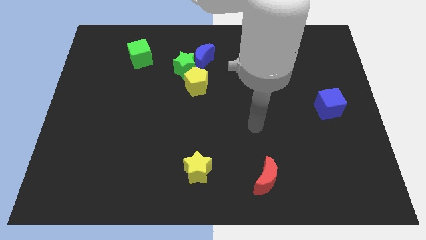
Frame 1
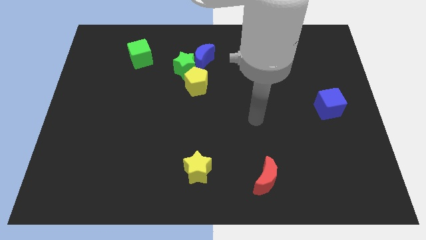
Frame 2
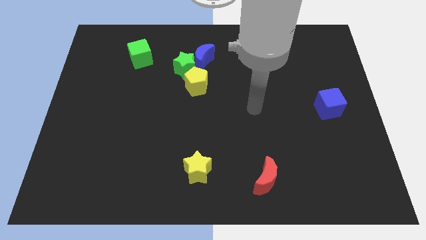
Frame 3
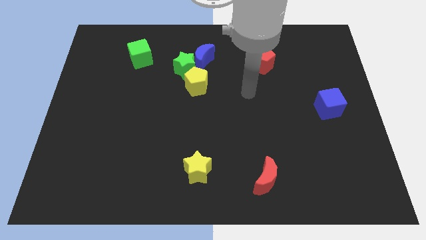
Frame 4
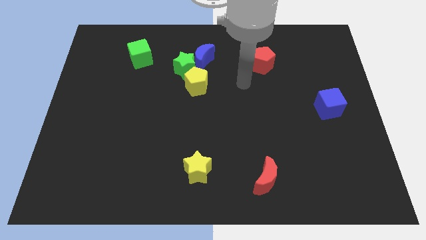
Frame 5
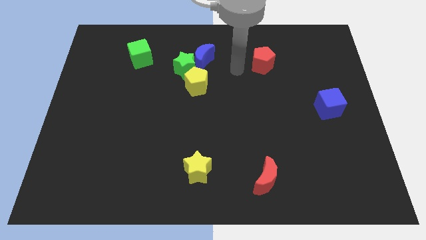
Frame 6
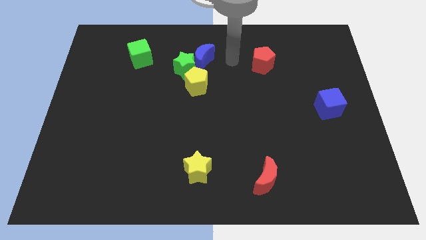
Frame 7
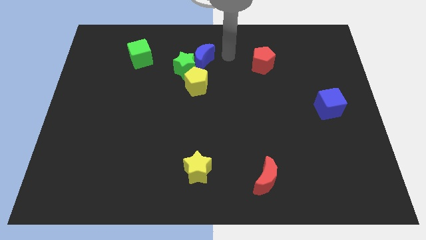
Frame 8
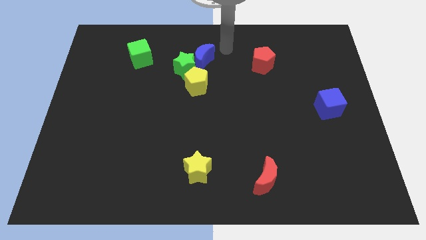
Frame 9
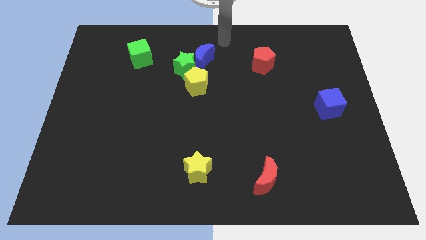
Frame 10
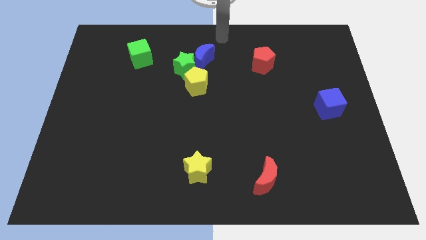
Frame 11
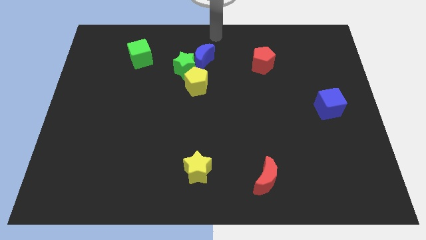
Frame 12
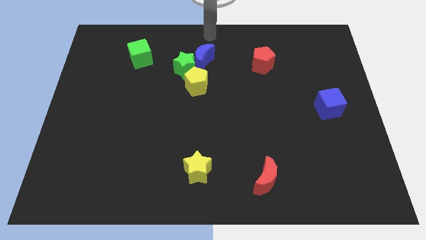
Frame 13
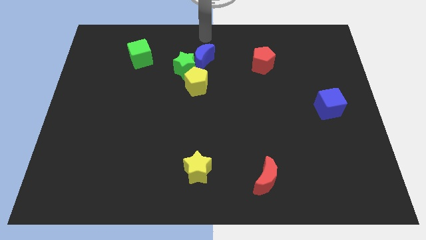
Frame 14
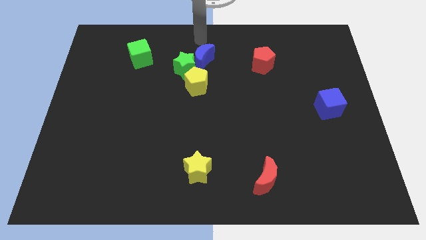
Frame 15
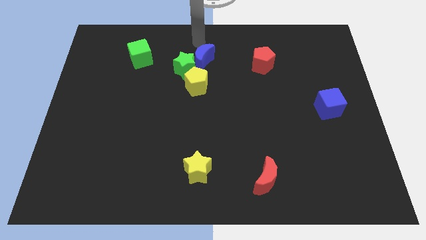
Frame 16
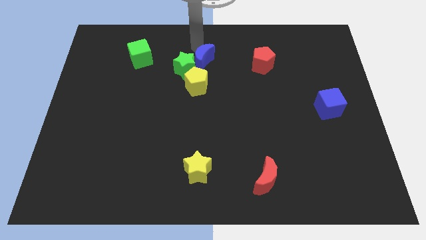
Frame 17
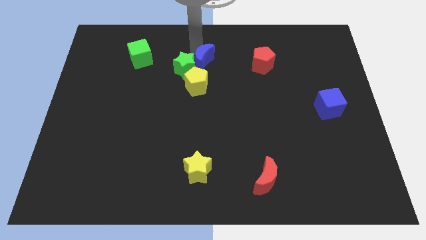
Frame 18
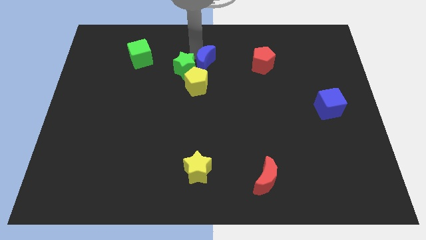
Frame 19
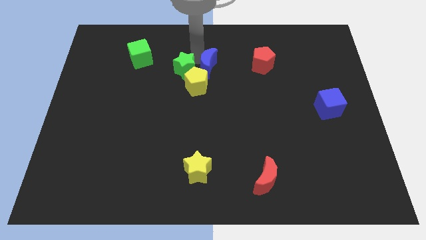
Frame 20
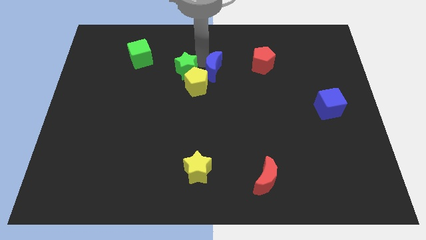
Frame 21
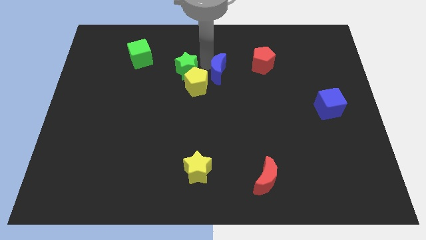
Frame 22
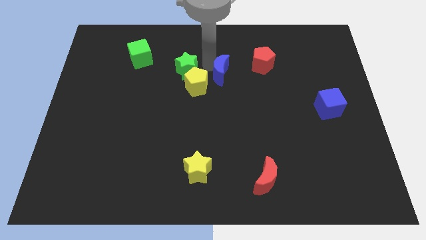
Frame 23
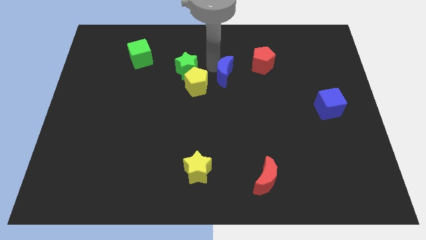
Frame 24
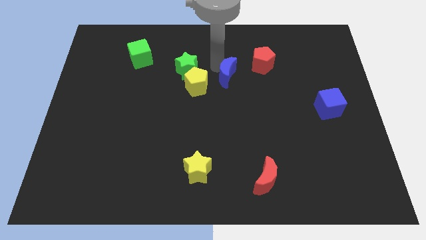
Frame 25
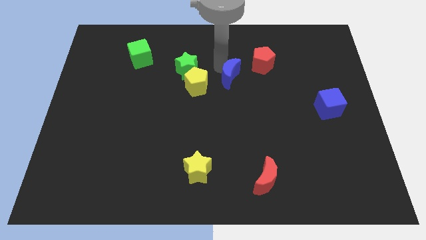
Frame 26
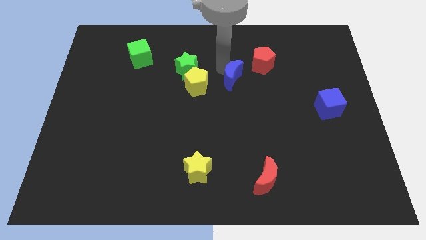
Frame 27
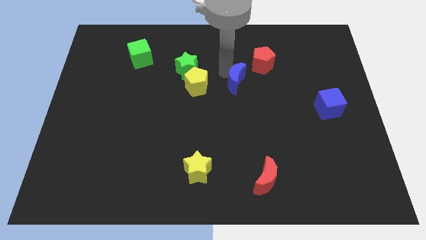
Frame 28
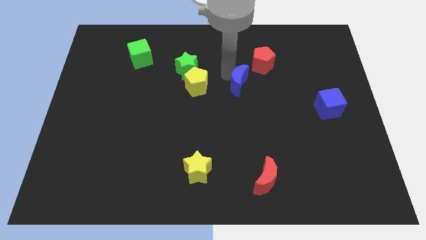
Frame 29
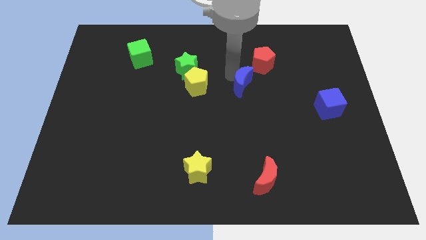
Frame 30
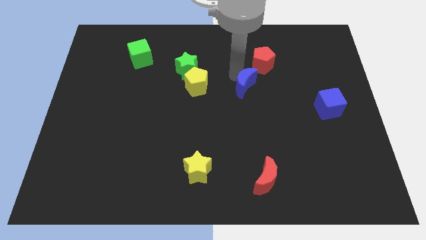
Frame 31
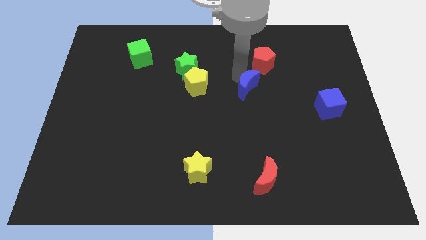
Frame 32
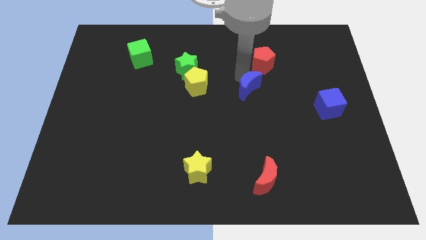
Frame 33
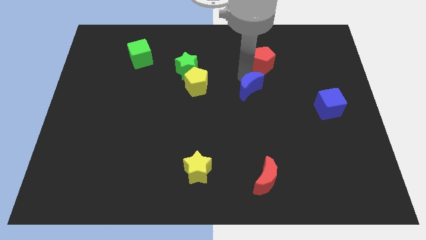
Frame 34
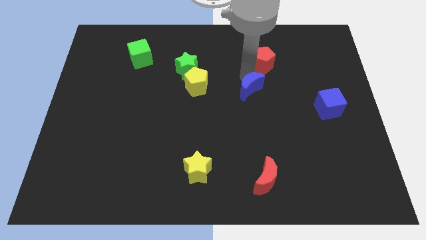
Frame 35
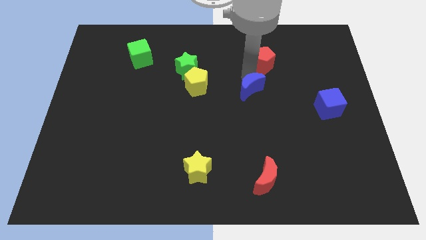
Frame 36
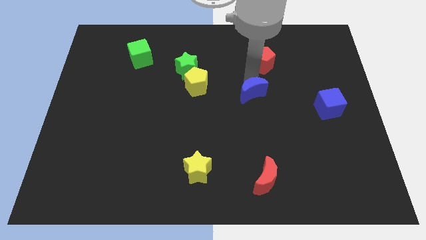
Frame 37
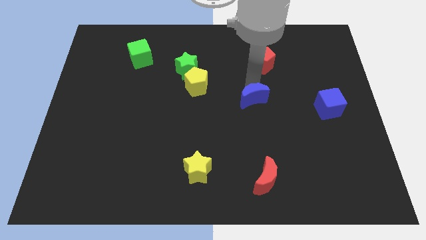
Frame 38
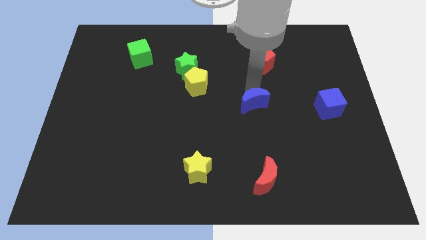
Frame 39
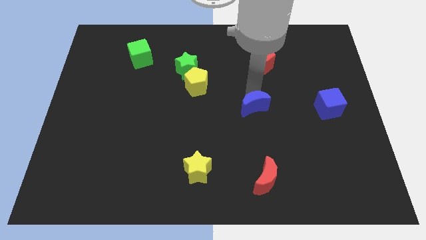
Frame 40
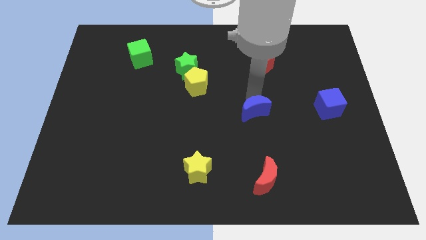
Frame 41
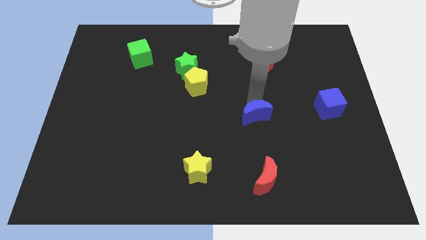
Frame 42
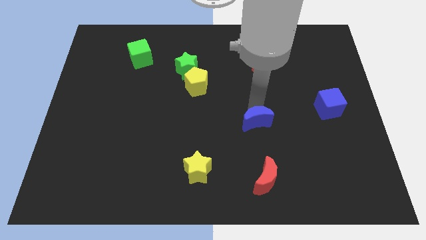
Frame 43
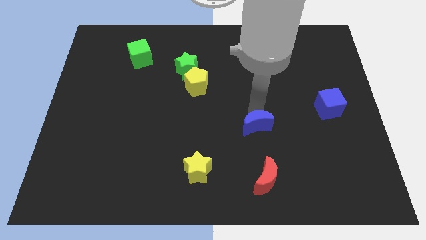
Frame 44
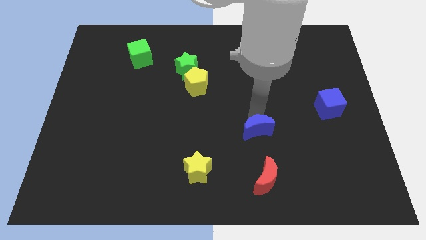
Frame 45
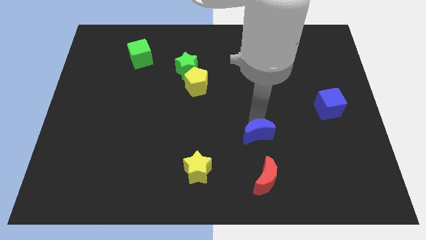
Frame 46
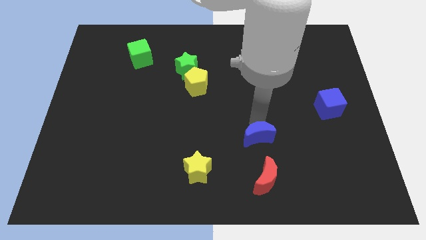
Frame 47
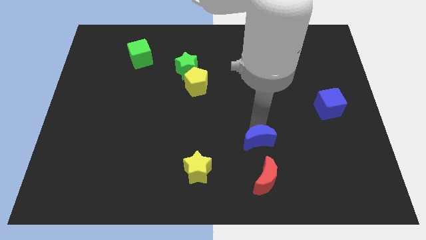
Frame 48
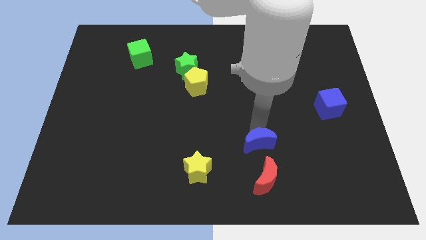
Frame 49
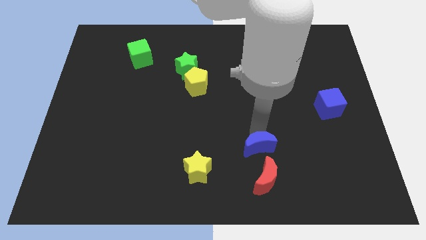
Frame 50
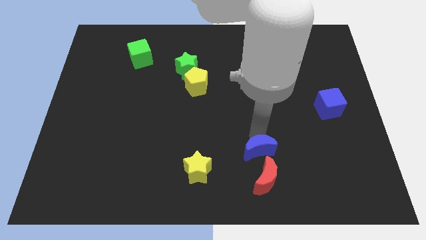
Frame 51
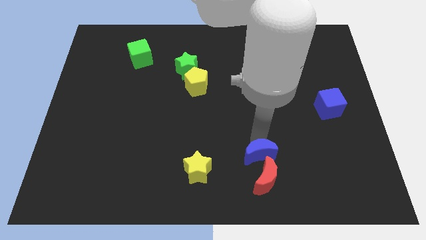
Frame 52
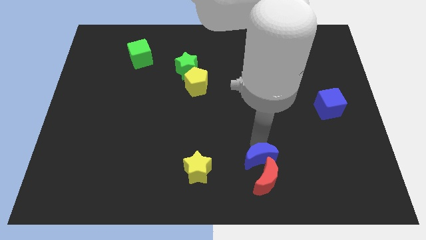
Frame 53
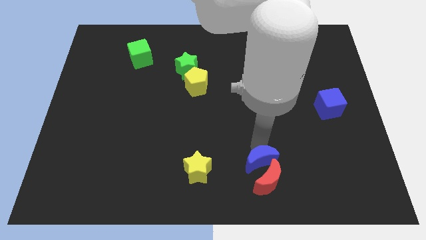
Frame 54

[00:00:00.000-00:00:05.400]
move the blue moon towards the red moon

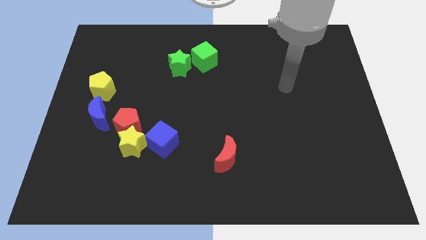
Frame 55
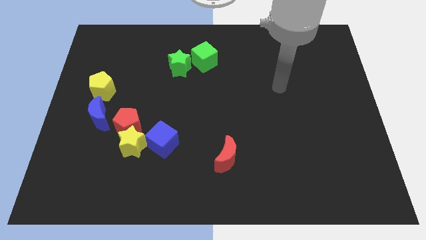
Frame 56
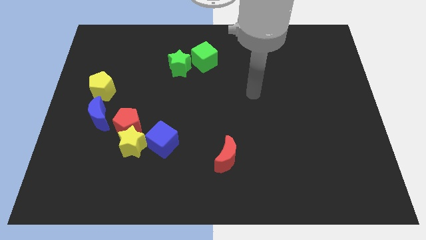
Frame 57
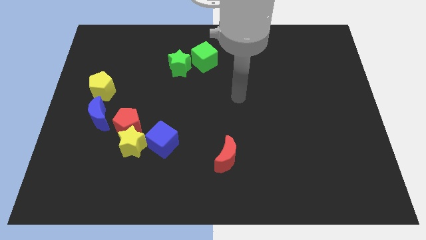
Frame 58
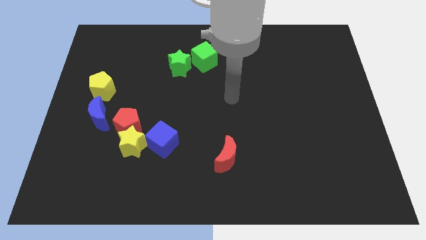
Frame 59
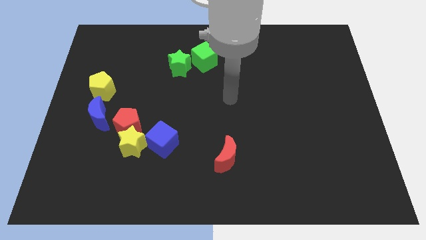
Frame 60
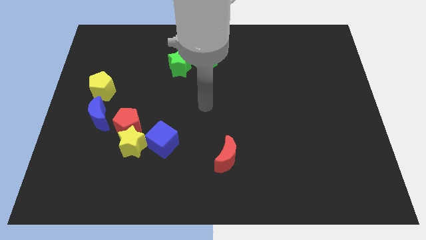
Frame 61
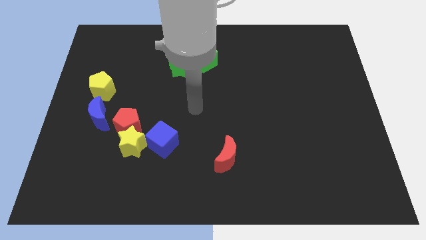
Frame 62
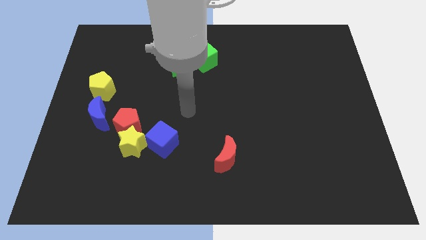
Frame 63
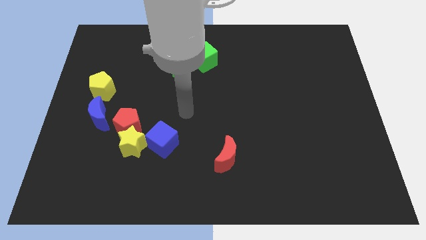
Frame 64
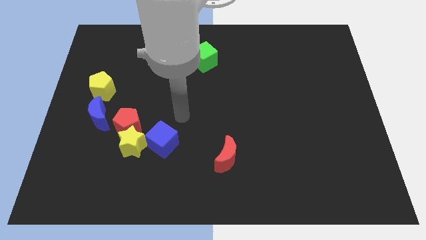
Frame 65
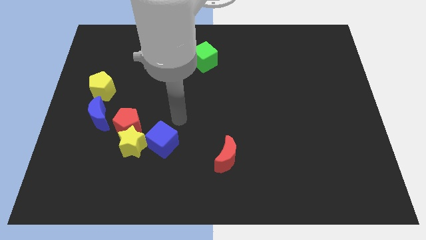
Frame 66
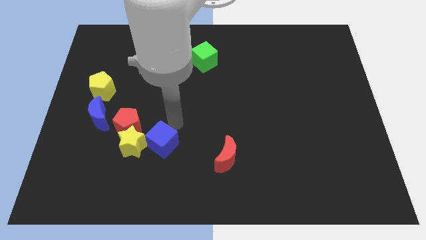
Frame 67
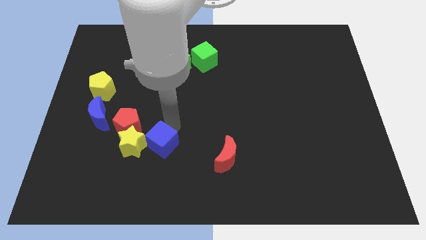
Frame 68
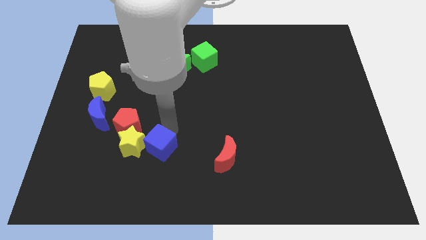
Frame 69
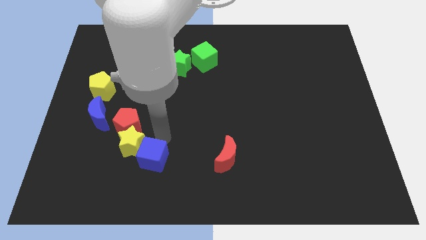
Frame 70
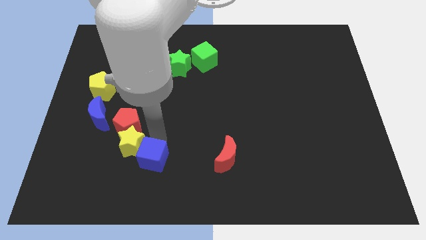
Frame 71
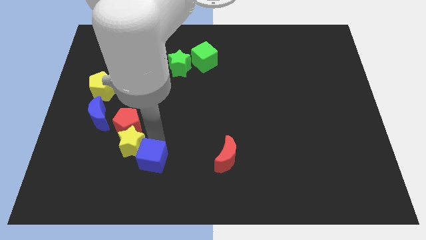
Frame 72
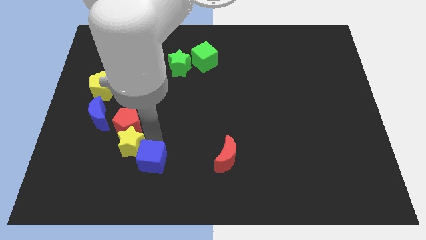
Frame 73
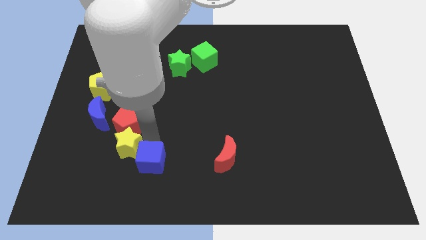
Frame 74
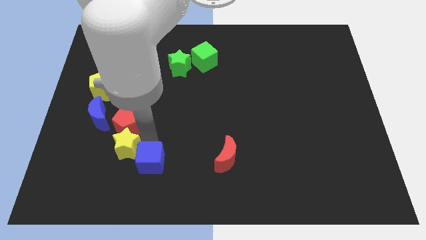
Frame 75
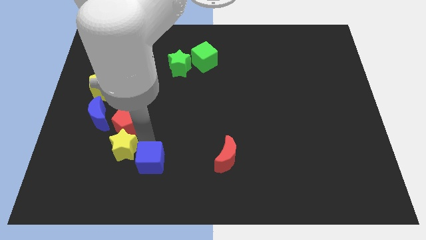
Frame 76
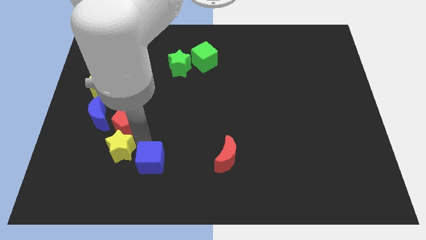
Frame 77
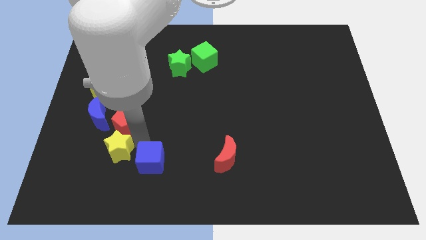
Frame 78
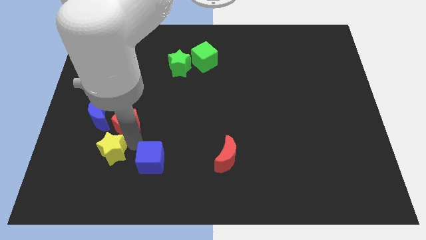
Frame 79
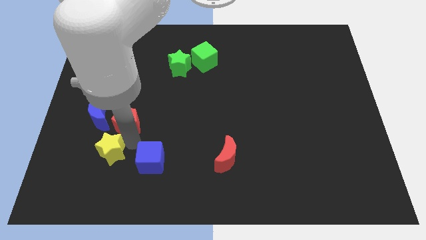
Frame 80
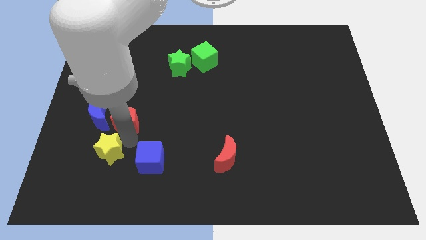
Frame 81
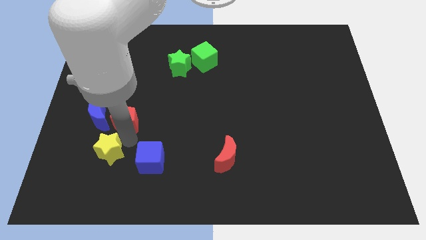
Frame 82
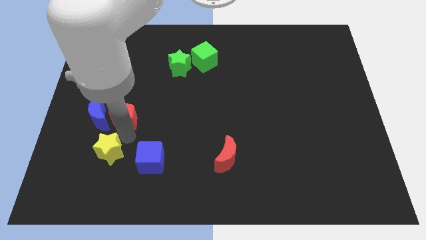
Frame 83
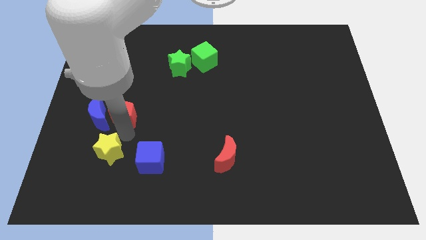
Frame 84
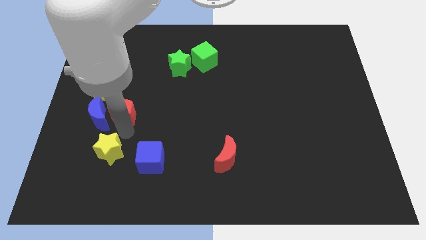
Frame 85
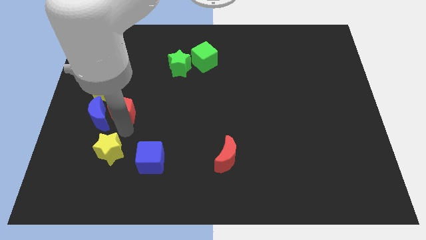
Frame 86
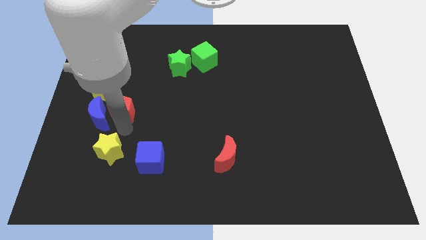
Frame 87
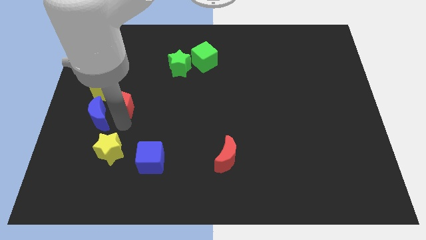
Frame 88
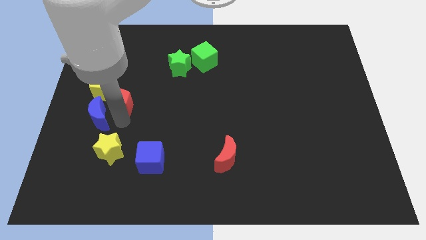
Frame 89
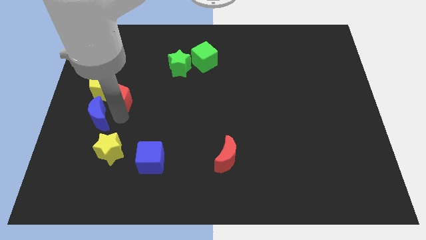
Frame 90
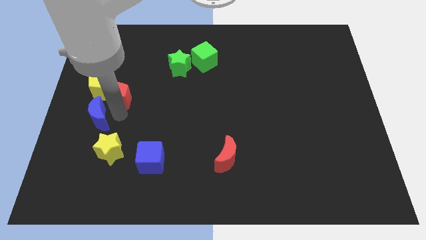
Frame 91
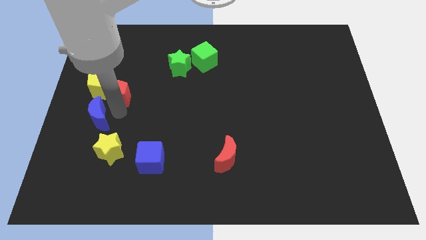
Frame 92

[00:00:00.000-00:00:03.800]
move the red pentagon towards the yellow pentagon
